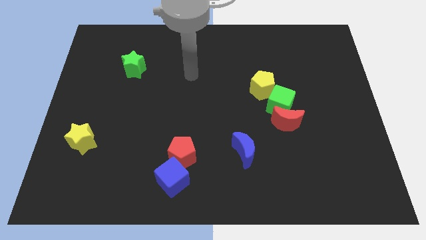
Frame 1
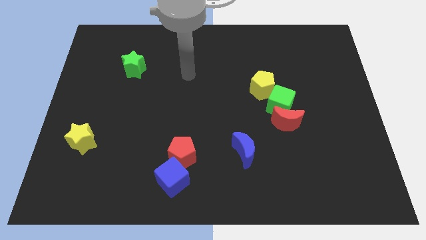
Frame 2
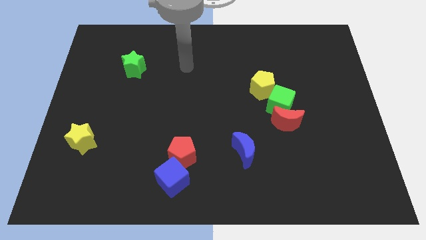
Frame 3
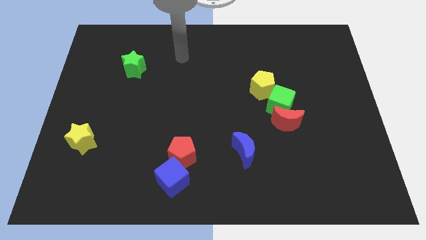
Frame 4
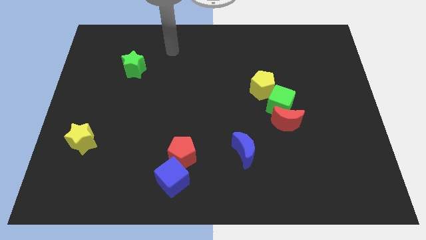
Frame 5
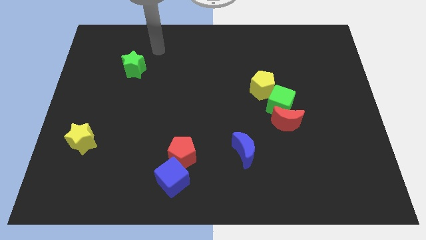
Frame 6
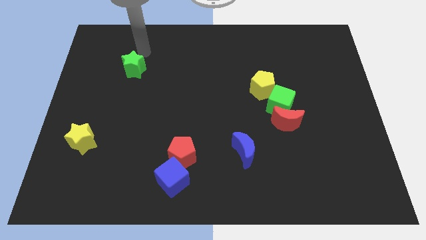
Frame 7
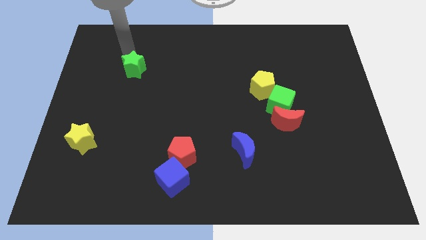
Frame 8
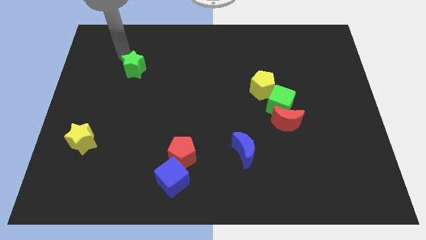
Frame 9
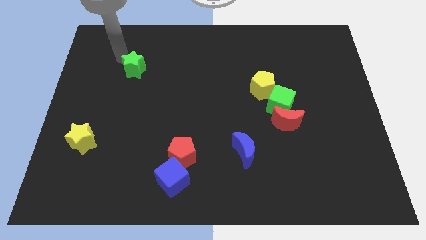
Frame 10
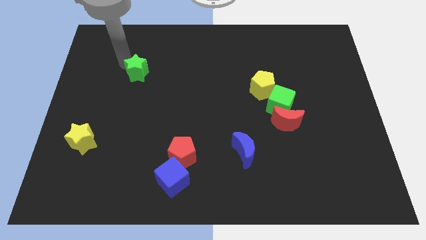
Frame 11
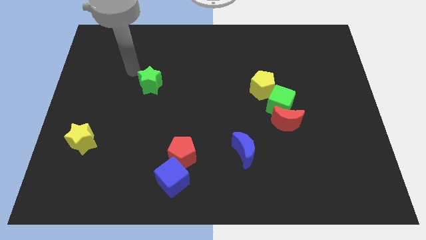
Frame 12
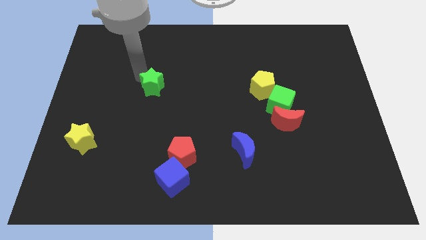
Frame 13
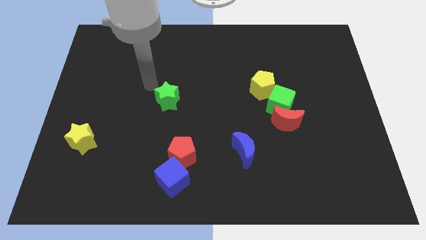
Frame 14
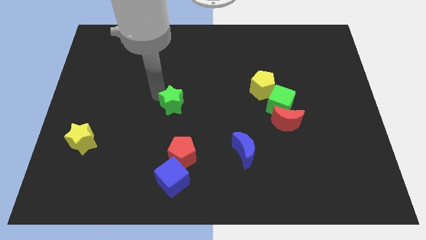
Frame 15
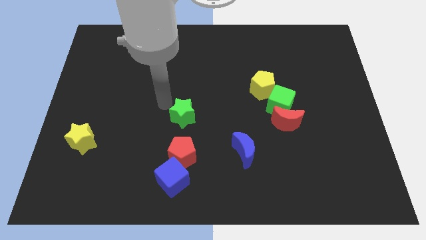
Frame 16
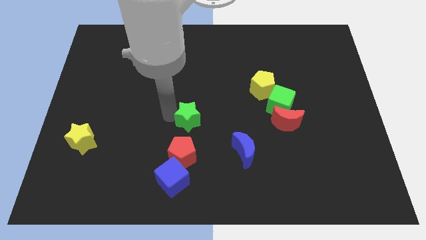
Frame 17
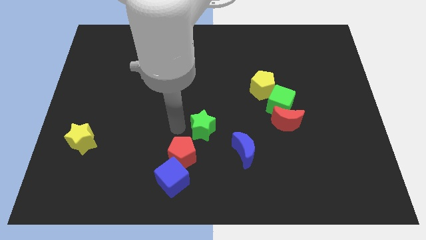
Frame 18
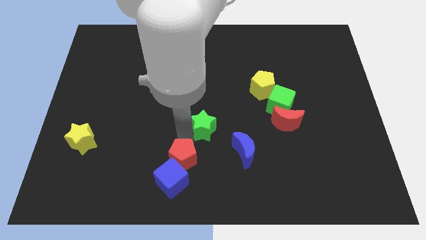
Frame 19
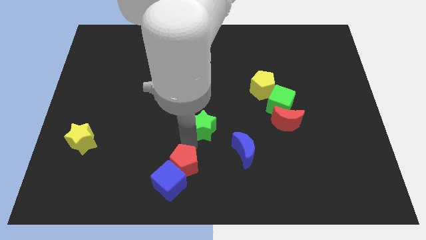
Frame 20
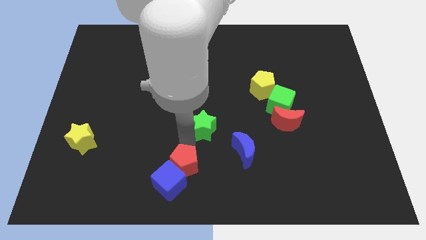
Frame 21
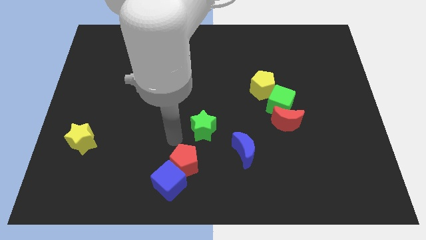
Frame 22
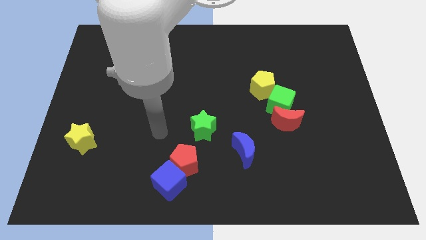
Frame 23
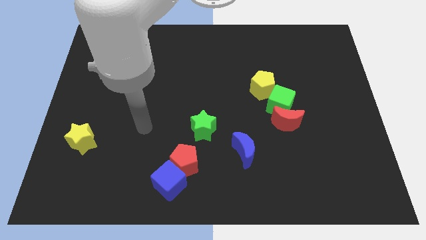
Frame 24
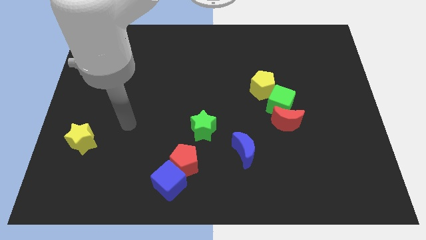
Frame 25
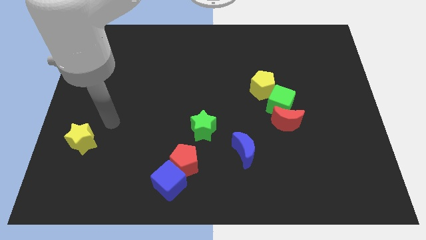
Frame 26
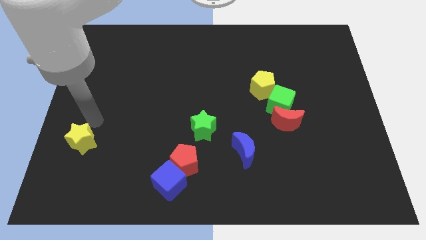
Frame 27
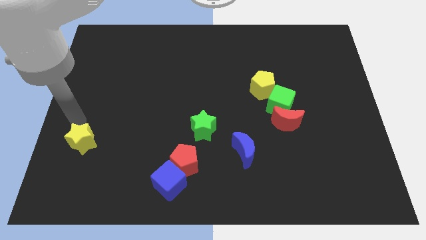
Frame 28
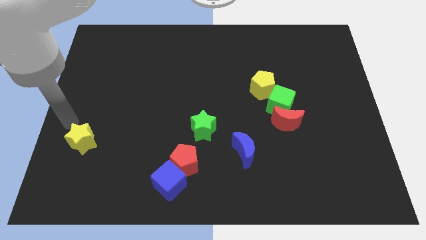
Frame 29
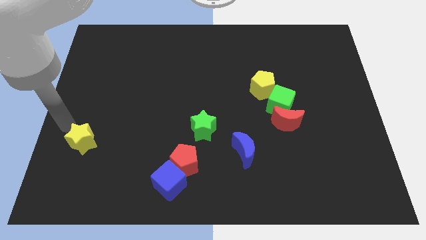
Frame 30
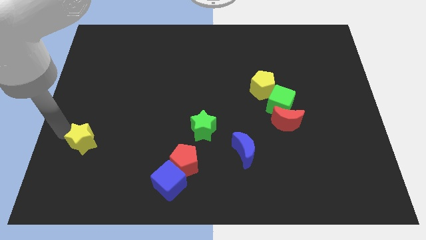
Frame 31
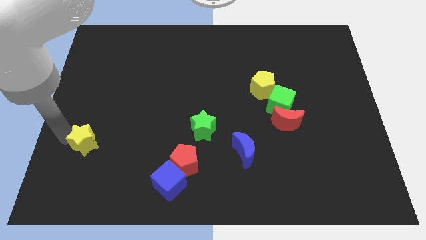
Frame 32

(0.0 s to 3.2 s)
push the green star close to the red pentagon

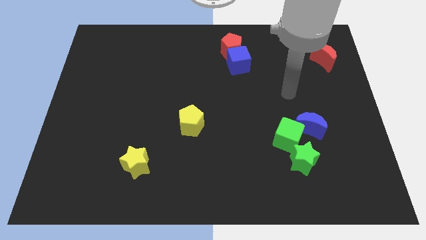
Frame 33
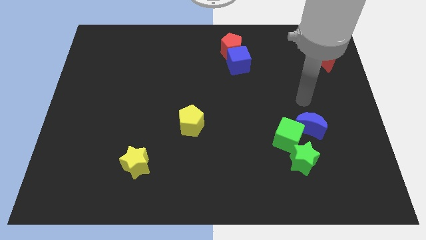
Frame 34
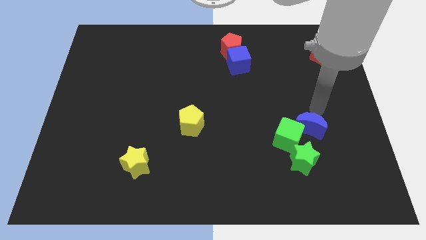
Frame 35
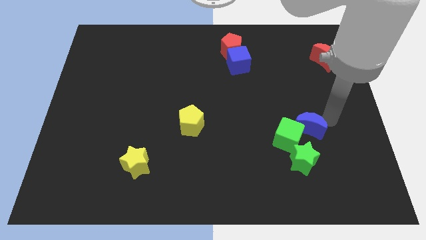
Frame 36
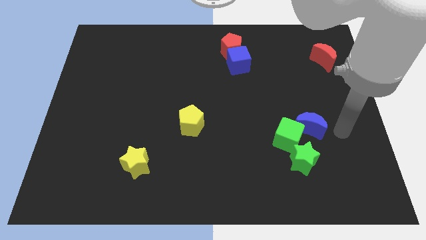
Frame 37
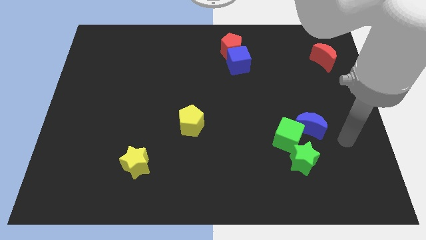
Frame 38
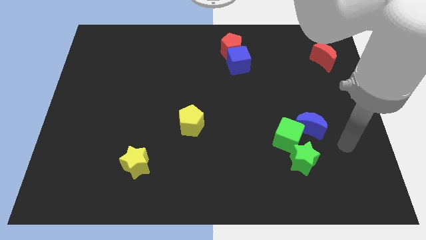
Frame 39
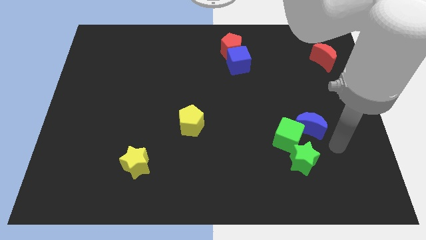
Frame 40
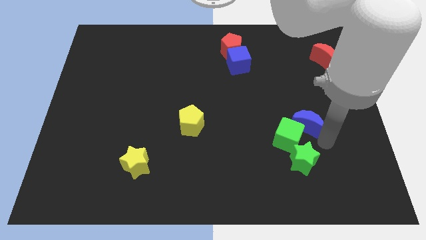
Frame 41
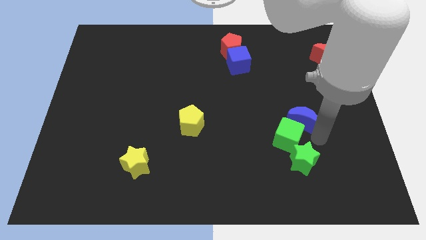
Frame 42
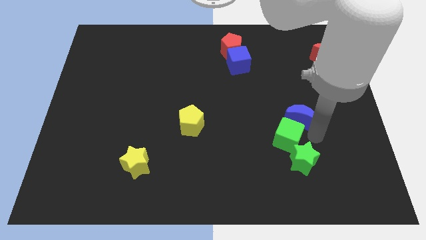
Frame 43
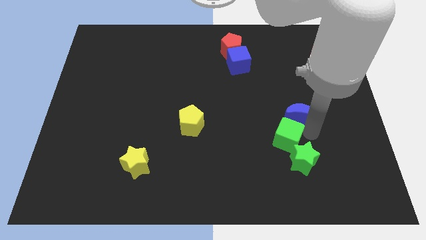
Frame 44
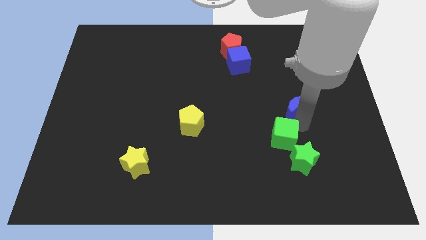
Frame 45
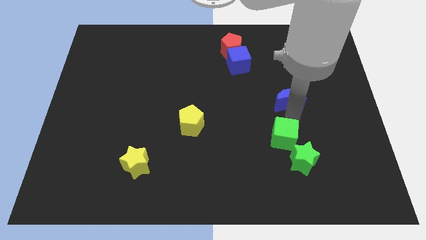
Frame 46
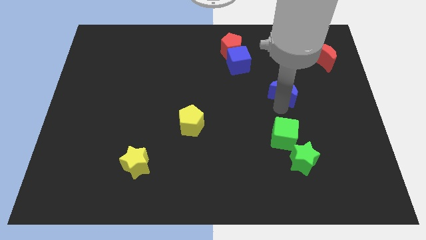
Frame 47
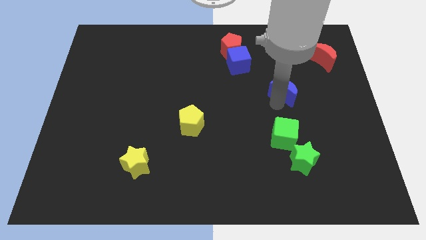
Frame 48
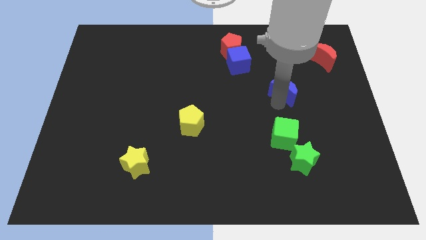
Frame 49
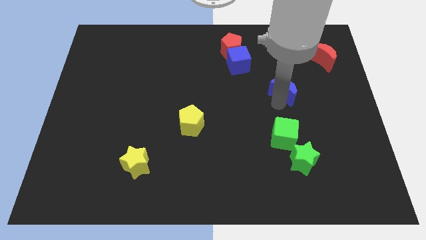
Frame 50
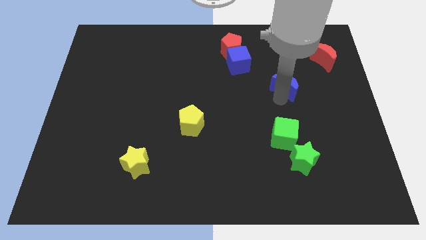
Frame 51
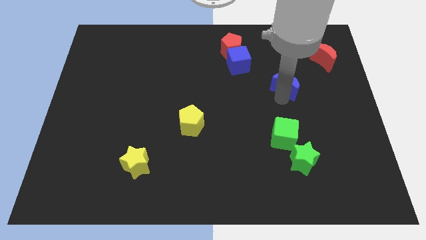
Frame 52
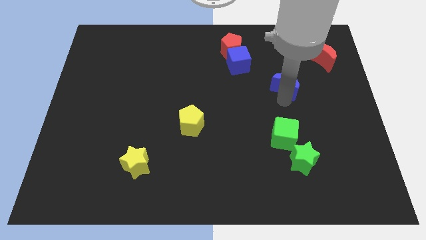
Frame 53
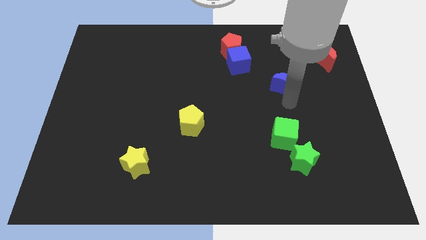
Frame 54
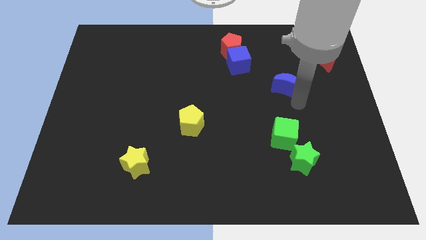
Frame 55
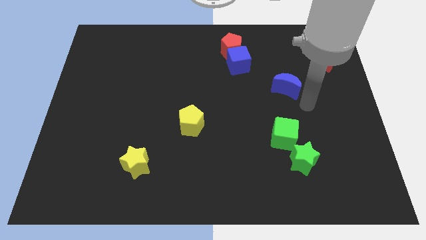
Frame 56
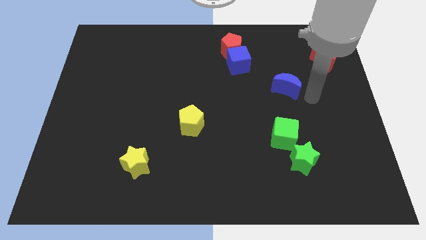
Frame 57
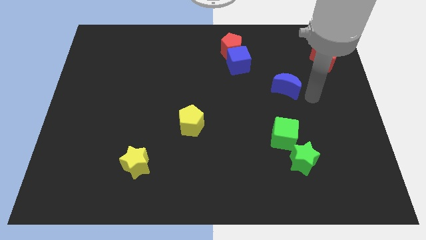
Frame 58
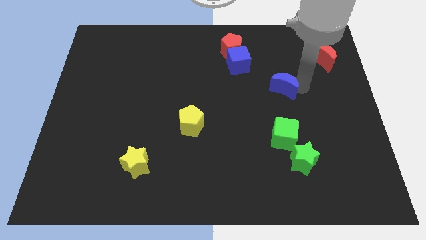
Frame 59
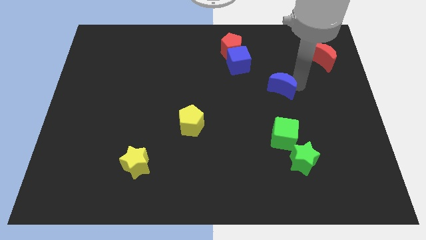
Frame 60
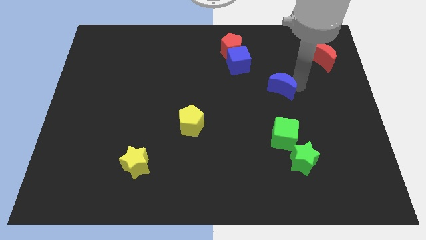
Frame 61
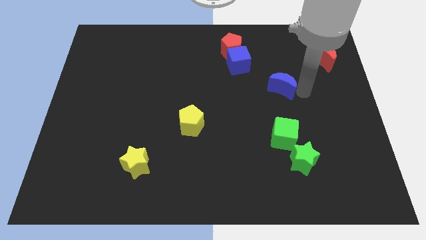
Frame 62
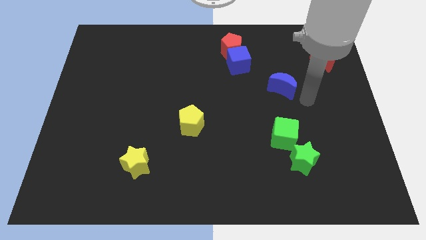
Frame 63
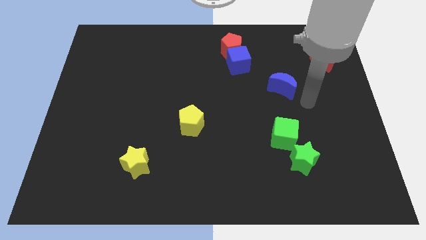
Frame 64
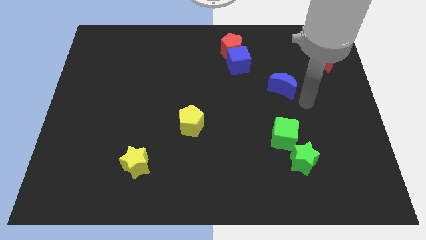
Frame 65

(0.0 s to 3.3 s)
place the blue moon diagonally bottom right to the blue cube

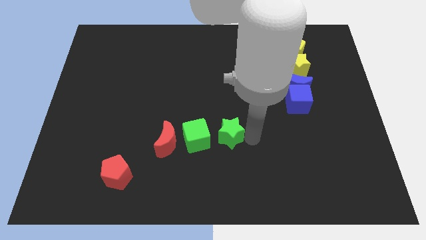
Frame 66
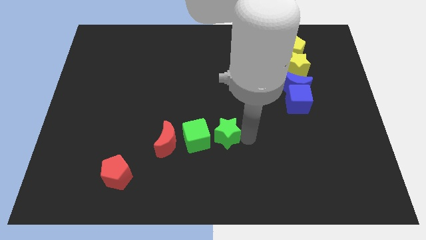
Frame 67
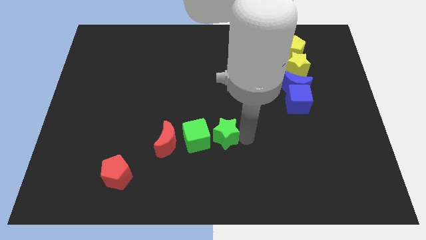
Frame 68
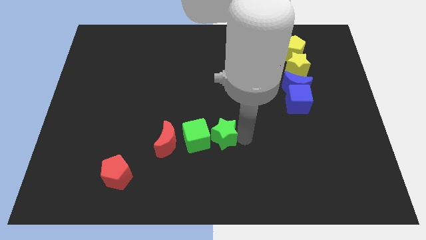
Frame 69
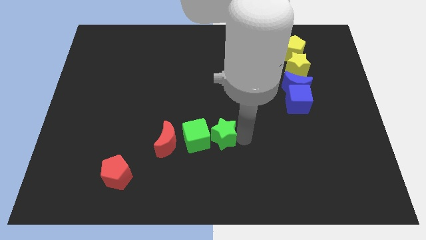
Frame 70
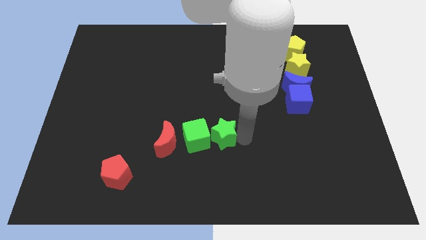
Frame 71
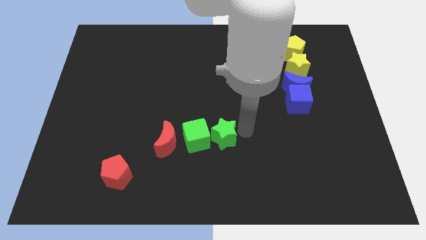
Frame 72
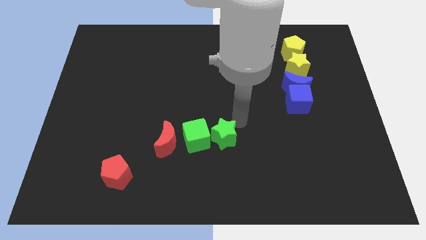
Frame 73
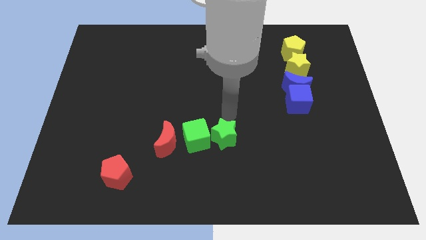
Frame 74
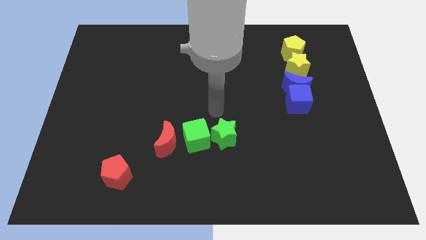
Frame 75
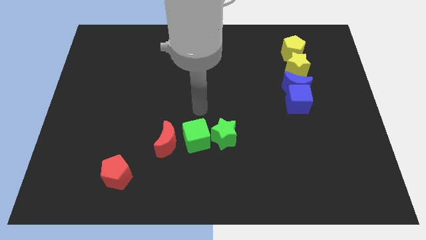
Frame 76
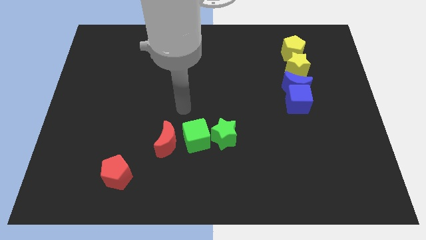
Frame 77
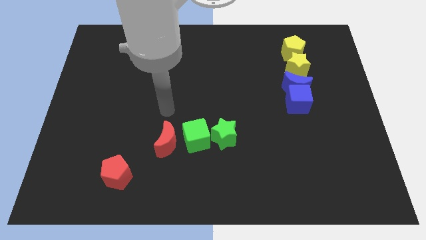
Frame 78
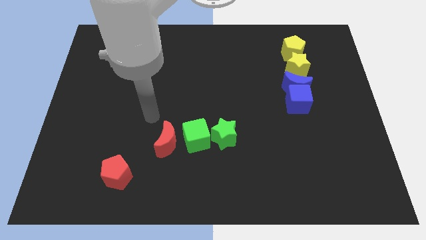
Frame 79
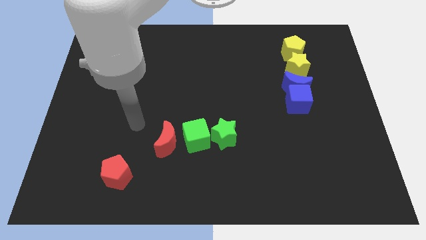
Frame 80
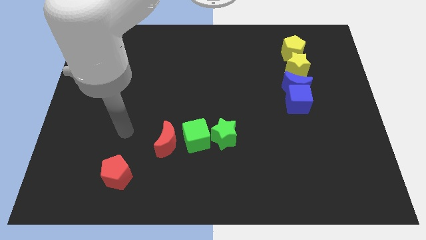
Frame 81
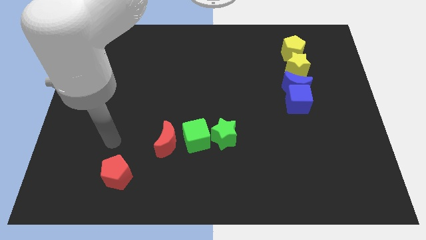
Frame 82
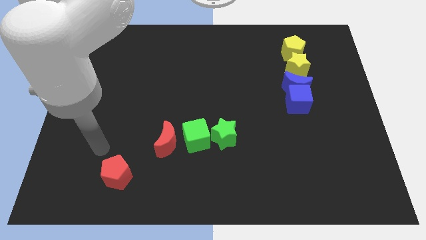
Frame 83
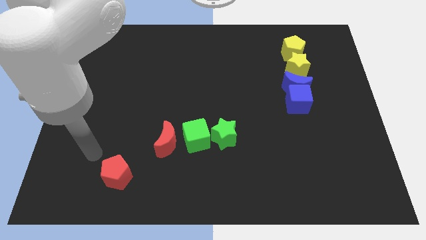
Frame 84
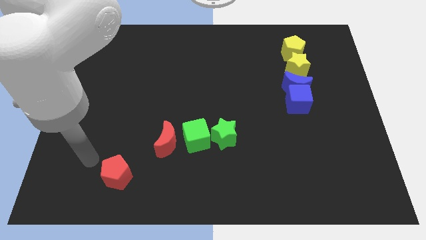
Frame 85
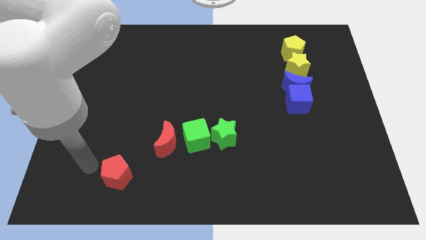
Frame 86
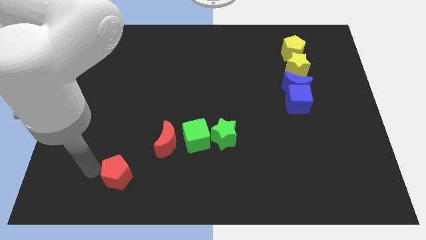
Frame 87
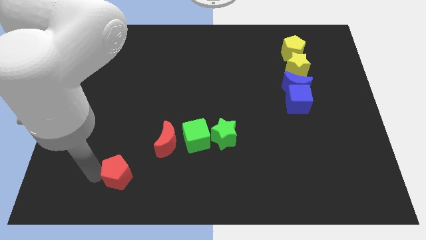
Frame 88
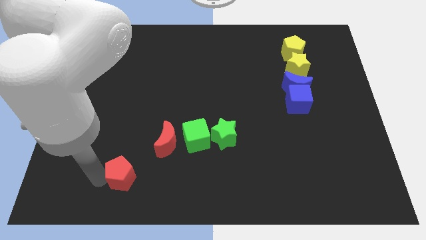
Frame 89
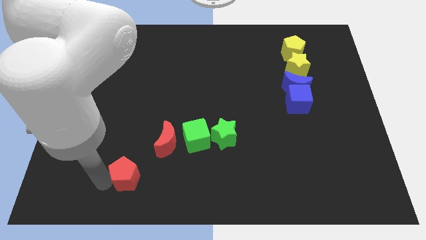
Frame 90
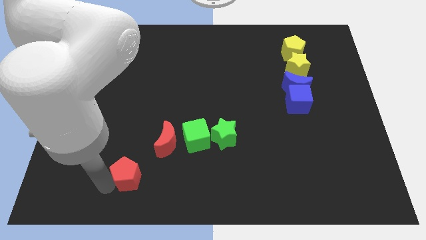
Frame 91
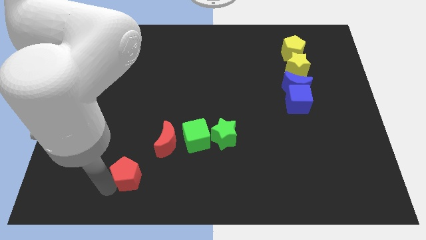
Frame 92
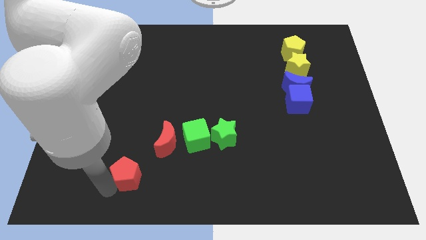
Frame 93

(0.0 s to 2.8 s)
move your arm into the red pentagon
